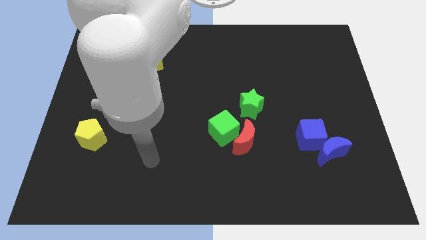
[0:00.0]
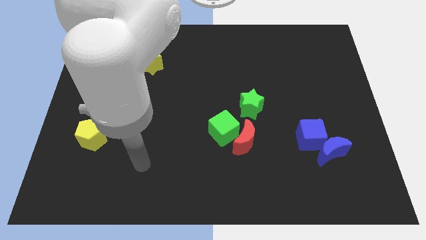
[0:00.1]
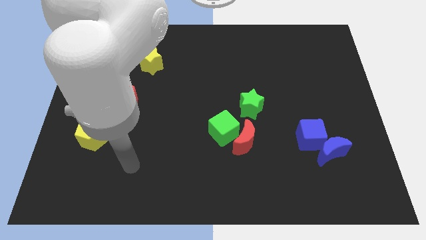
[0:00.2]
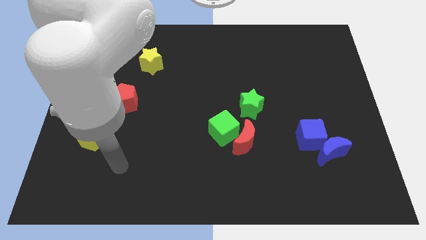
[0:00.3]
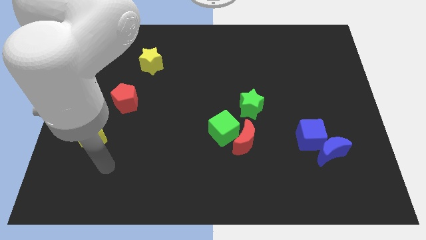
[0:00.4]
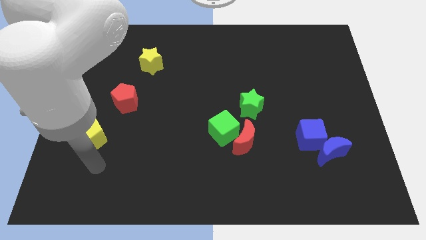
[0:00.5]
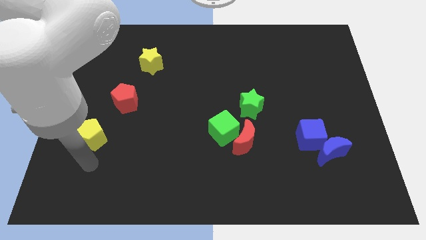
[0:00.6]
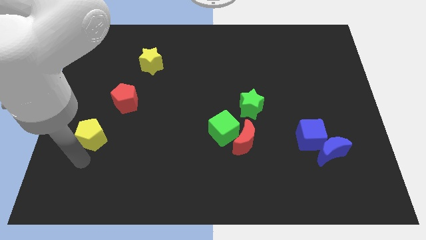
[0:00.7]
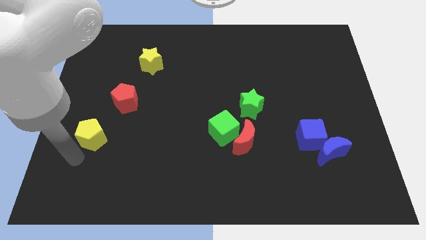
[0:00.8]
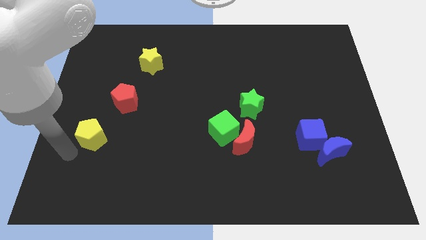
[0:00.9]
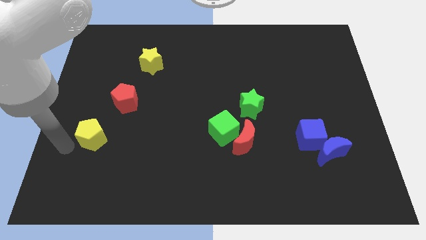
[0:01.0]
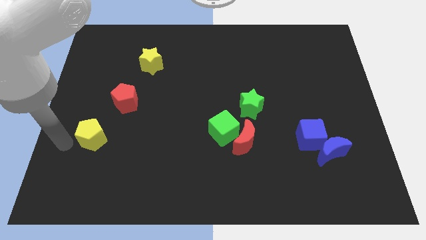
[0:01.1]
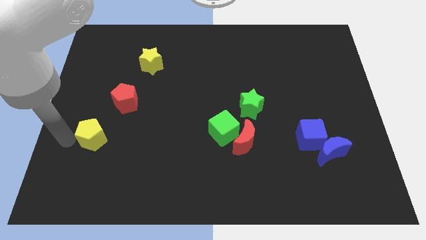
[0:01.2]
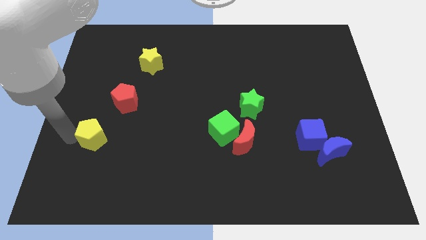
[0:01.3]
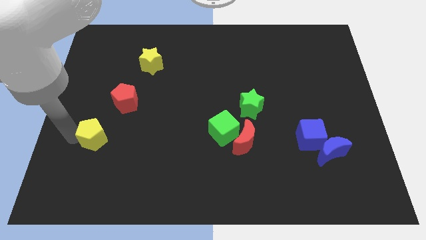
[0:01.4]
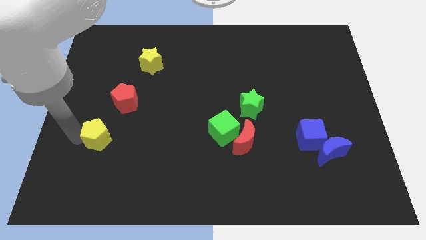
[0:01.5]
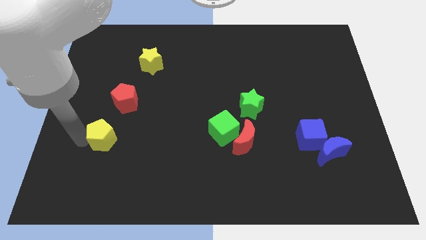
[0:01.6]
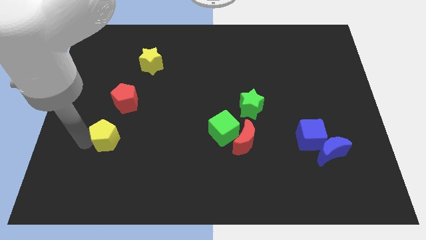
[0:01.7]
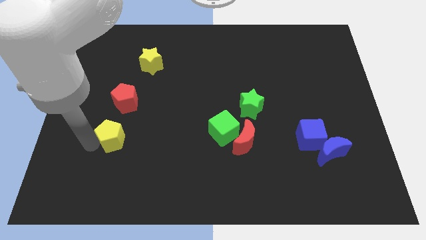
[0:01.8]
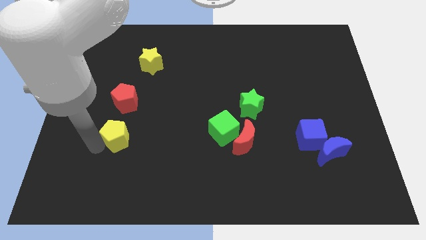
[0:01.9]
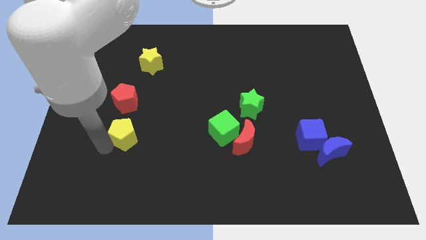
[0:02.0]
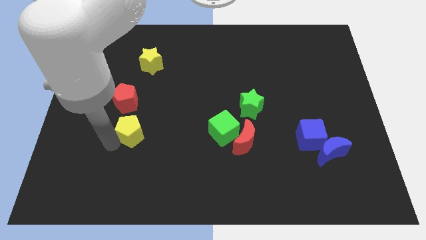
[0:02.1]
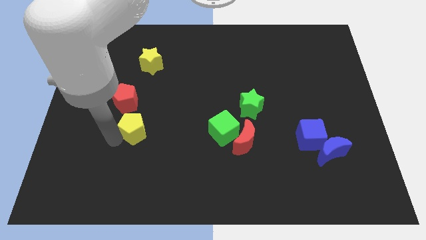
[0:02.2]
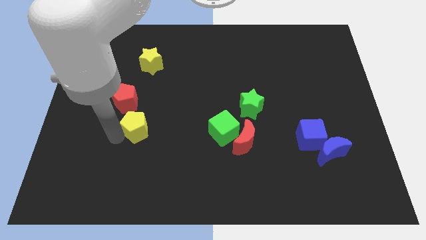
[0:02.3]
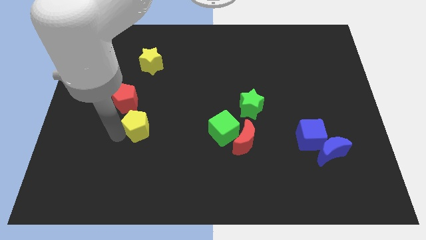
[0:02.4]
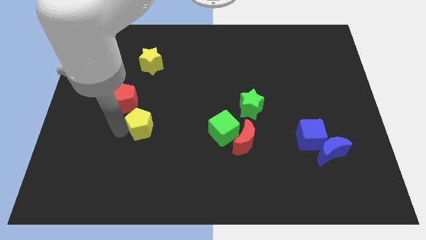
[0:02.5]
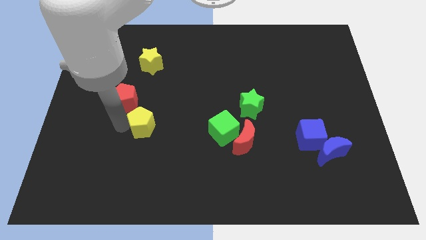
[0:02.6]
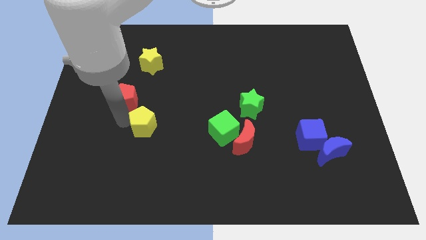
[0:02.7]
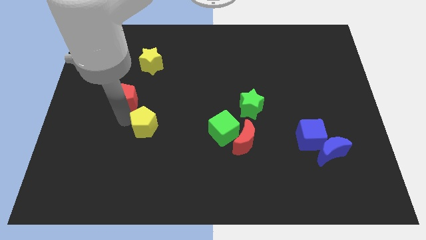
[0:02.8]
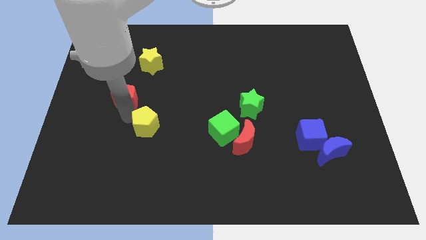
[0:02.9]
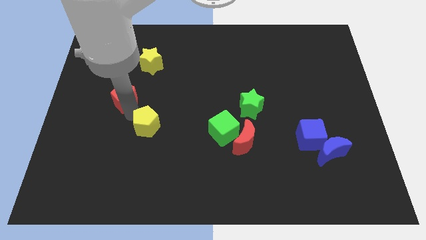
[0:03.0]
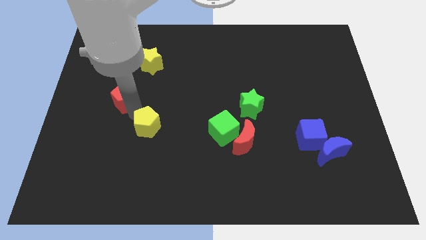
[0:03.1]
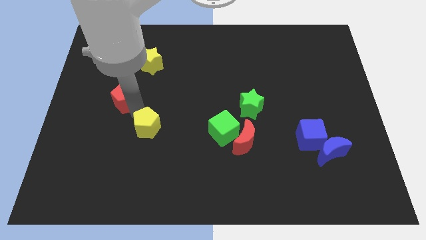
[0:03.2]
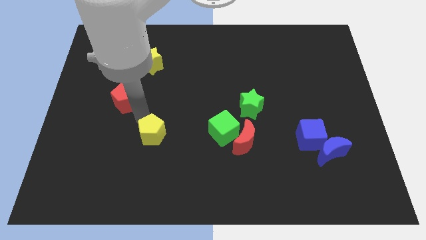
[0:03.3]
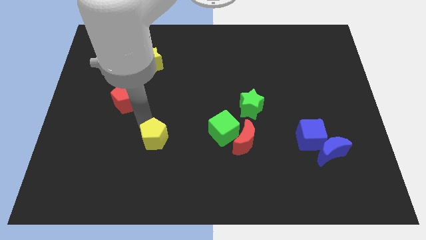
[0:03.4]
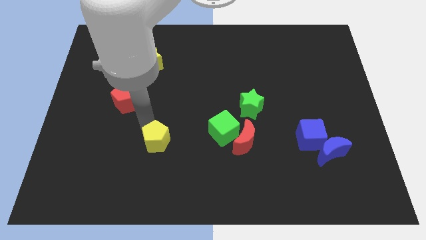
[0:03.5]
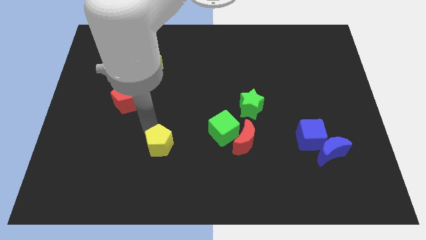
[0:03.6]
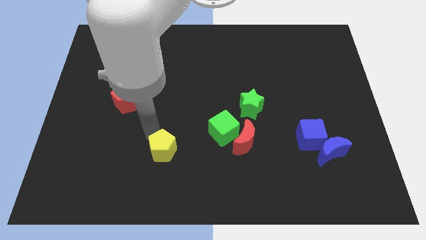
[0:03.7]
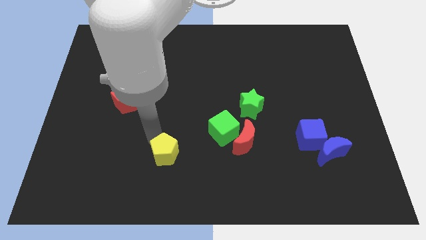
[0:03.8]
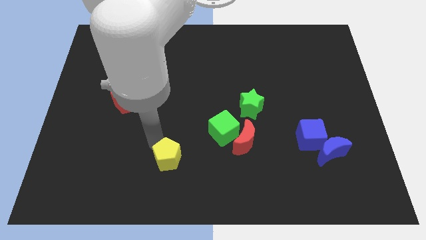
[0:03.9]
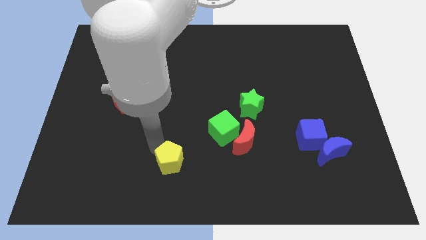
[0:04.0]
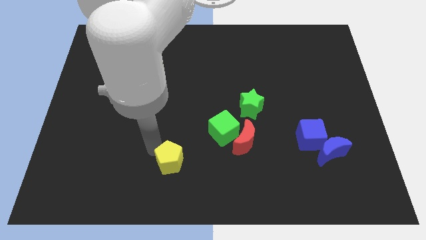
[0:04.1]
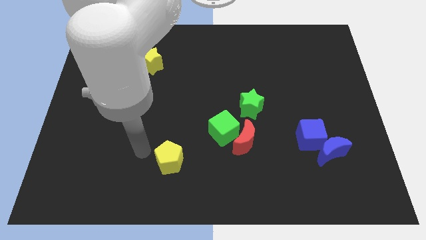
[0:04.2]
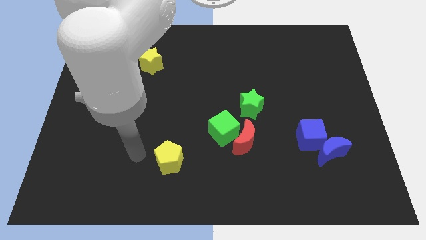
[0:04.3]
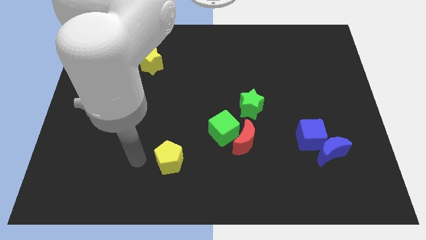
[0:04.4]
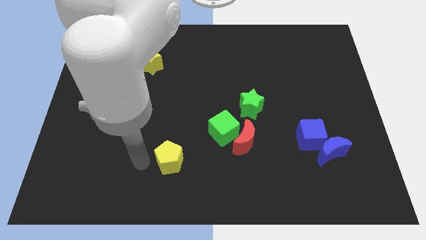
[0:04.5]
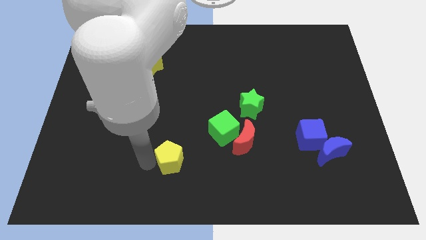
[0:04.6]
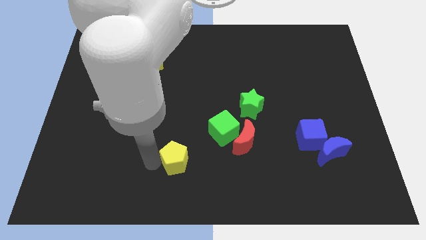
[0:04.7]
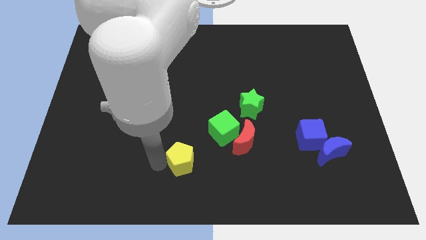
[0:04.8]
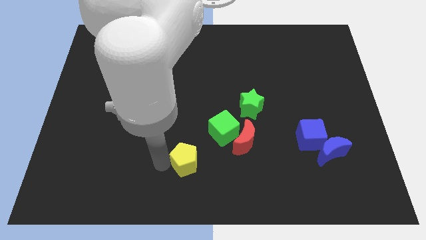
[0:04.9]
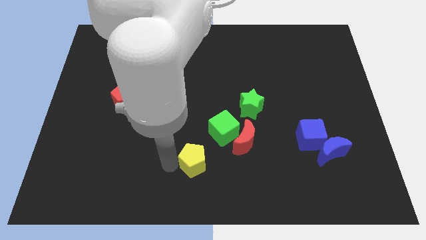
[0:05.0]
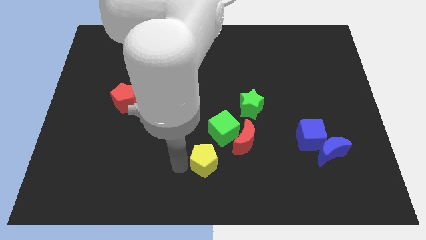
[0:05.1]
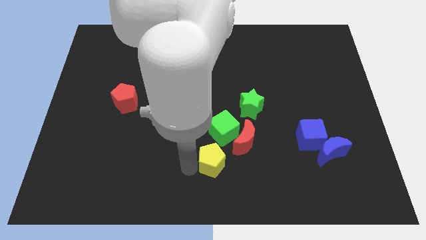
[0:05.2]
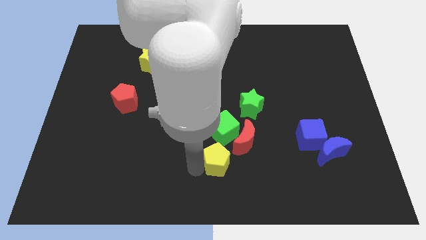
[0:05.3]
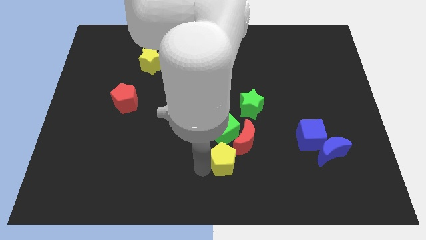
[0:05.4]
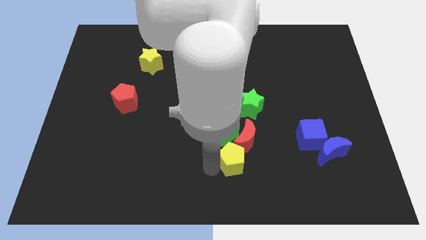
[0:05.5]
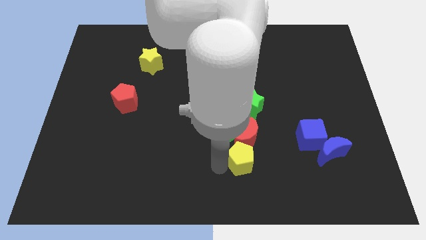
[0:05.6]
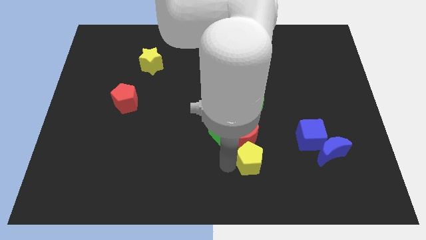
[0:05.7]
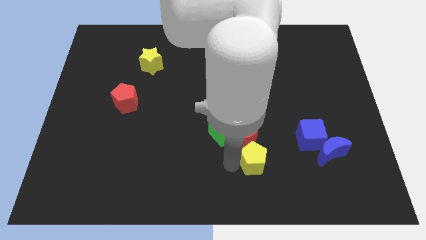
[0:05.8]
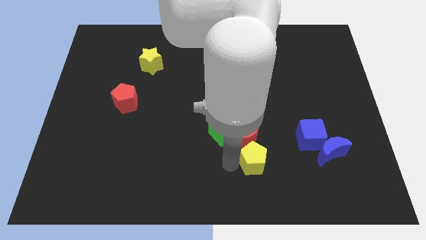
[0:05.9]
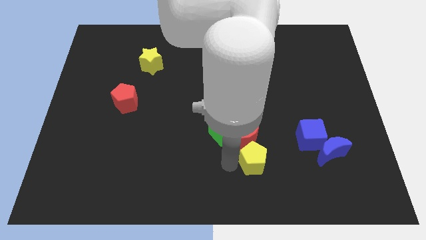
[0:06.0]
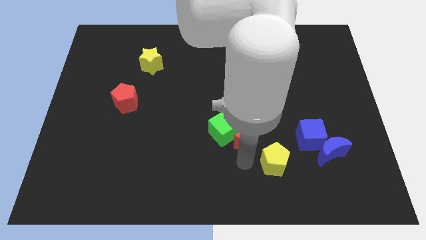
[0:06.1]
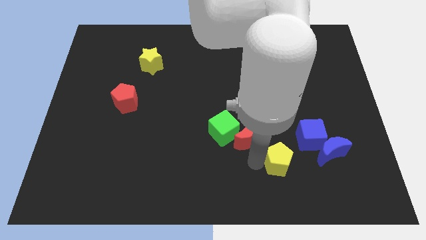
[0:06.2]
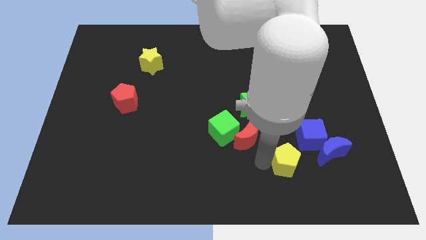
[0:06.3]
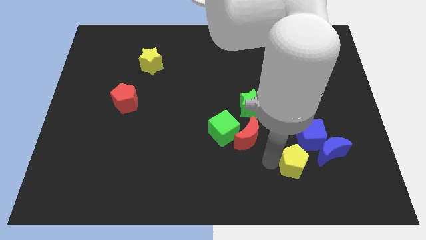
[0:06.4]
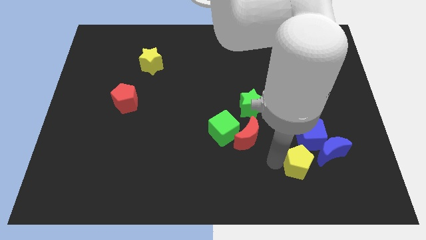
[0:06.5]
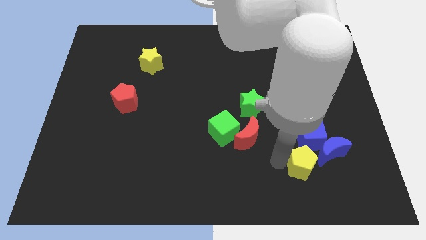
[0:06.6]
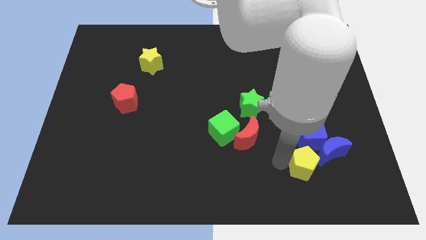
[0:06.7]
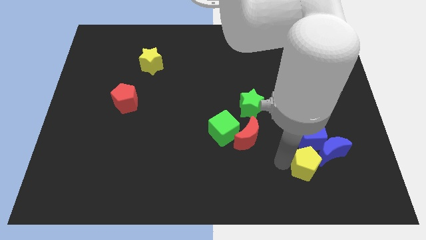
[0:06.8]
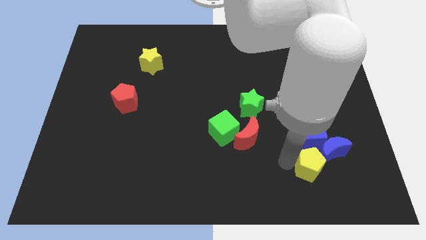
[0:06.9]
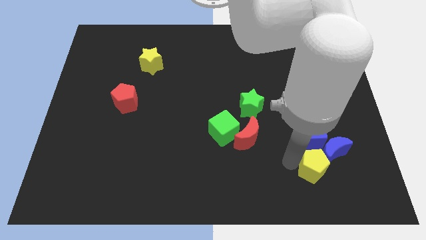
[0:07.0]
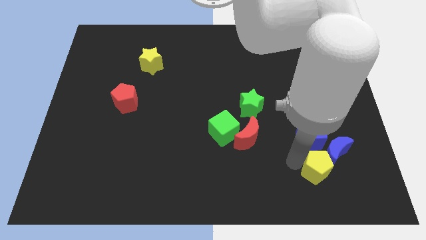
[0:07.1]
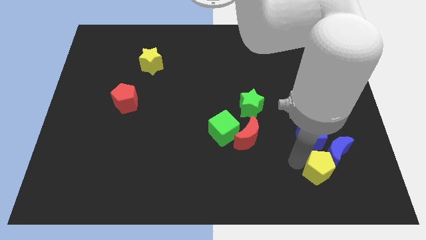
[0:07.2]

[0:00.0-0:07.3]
push the yellow pentagon to the blue moon

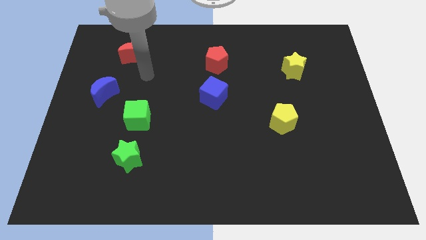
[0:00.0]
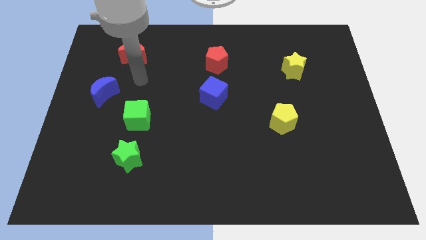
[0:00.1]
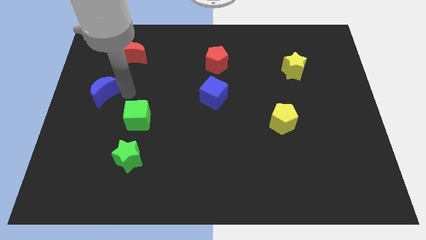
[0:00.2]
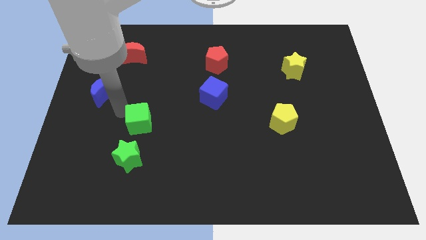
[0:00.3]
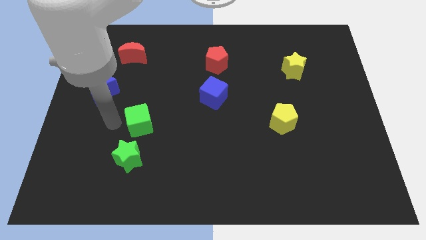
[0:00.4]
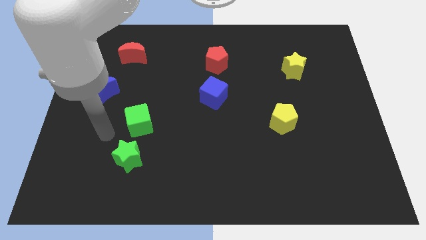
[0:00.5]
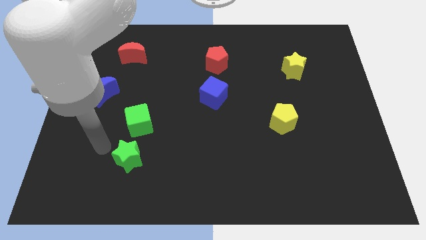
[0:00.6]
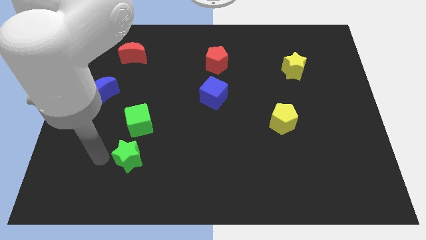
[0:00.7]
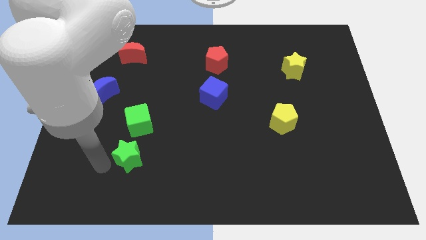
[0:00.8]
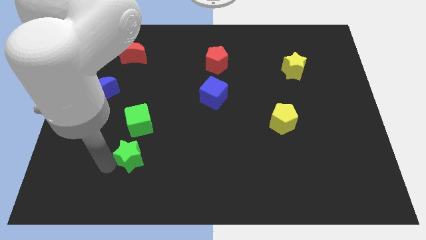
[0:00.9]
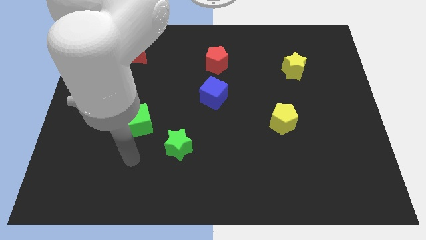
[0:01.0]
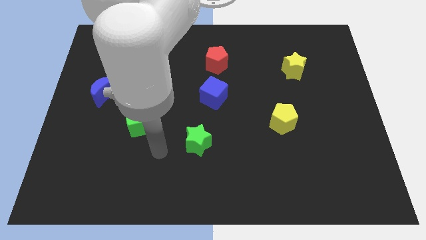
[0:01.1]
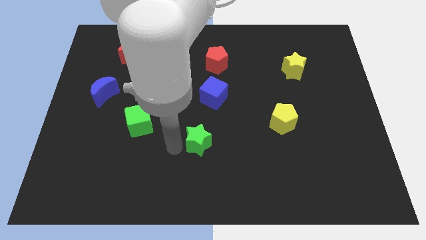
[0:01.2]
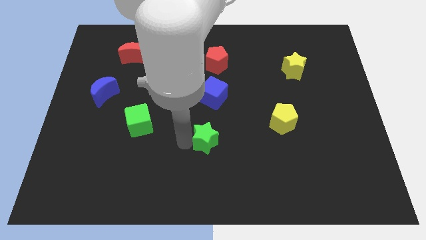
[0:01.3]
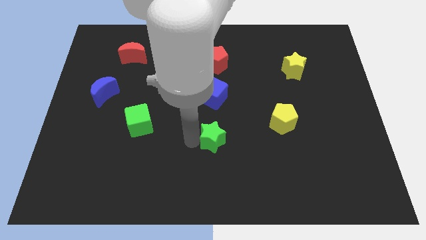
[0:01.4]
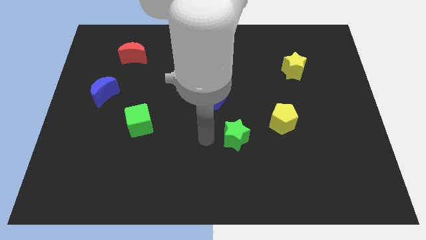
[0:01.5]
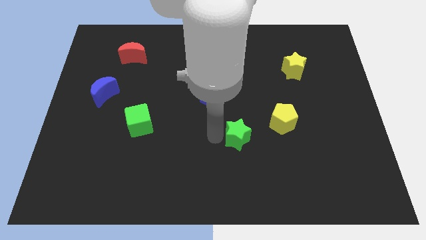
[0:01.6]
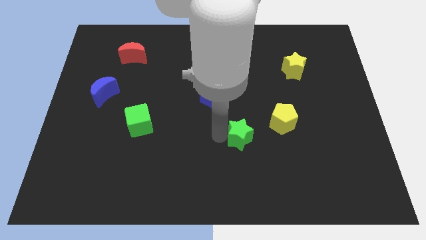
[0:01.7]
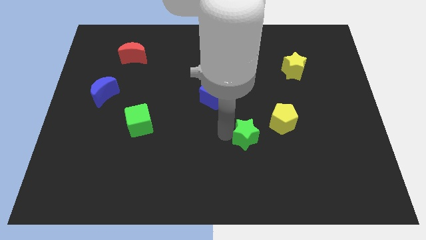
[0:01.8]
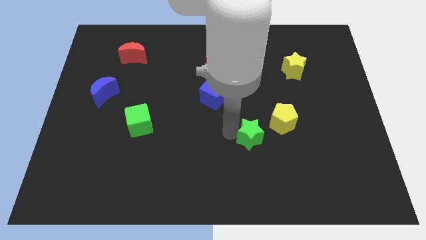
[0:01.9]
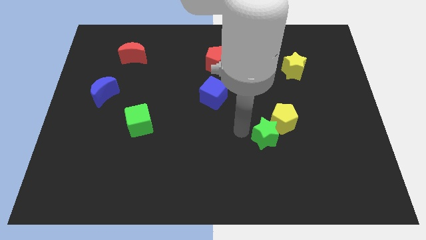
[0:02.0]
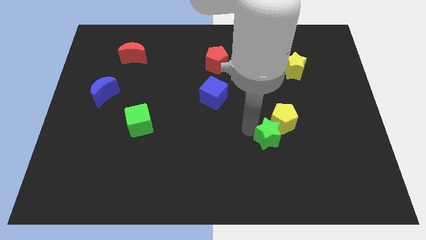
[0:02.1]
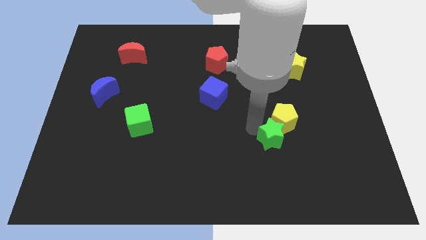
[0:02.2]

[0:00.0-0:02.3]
put the green star towards the yellow pentagon
